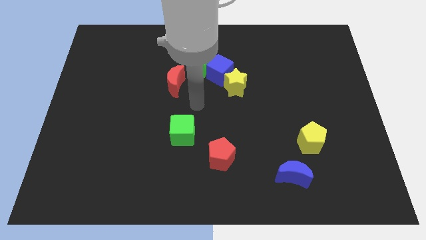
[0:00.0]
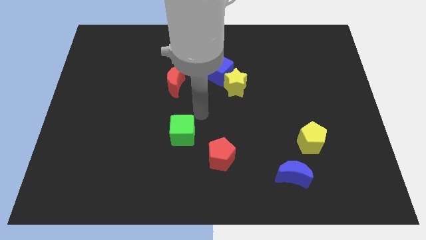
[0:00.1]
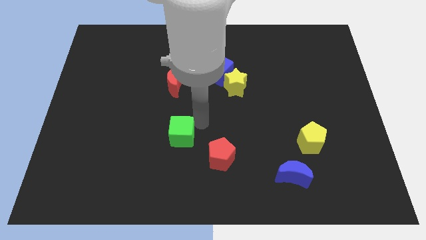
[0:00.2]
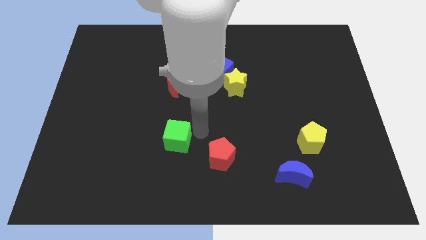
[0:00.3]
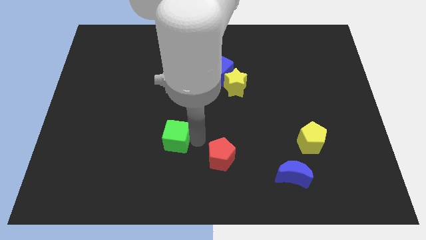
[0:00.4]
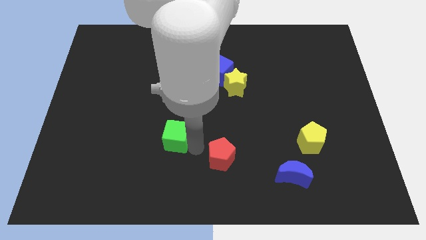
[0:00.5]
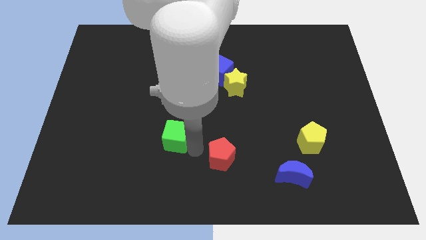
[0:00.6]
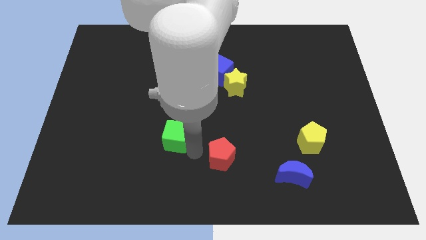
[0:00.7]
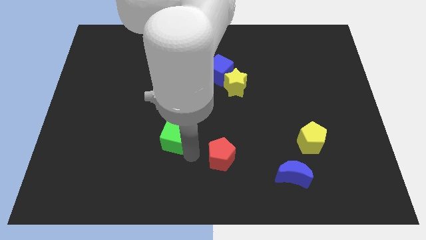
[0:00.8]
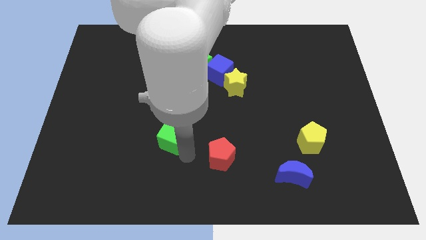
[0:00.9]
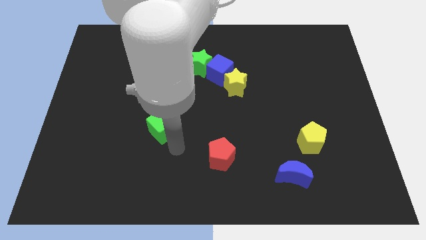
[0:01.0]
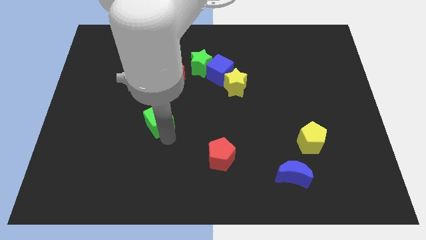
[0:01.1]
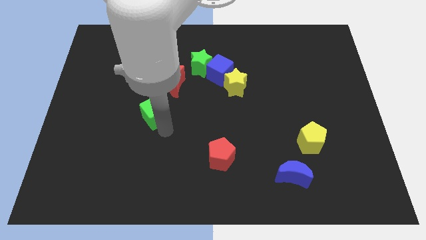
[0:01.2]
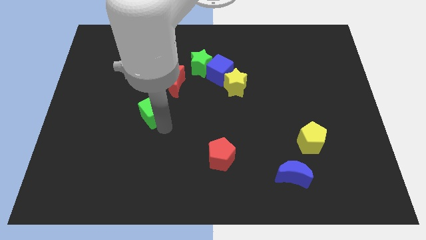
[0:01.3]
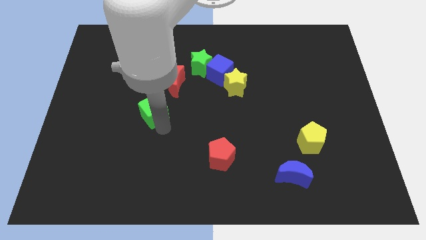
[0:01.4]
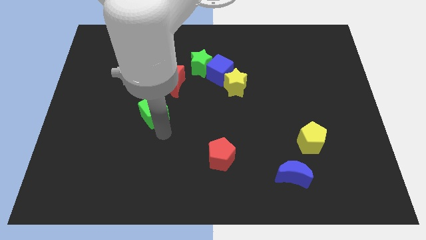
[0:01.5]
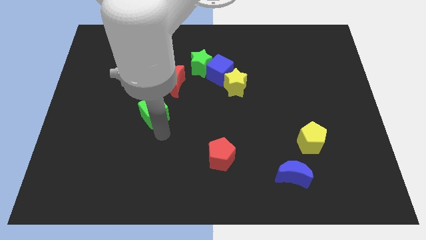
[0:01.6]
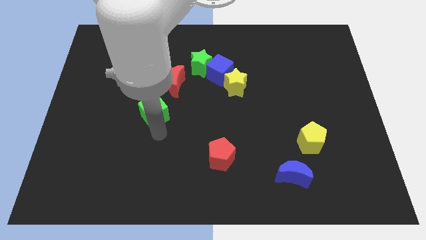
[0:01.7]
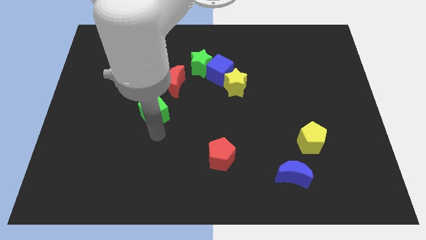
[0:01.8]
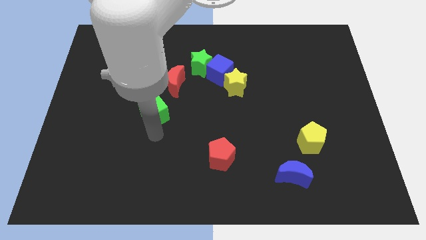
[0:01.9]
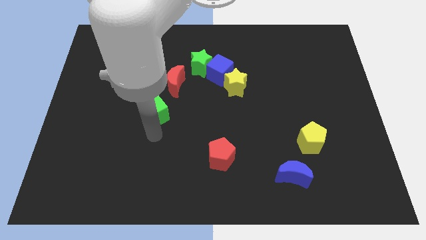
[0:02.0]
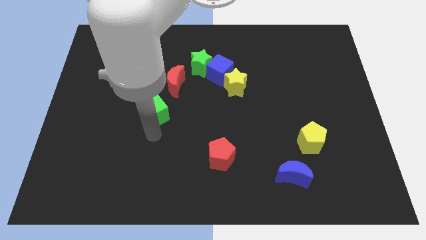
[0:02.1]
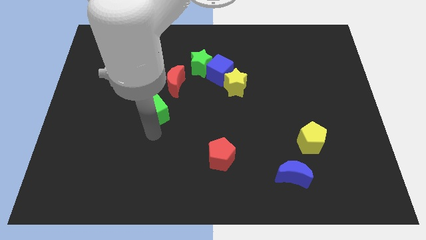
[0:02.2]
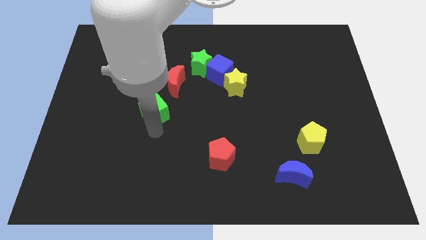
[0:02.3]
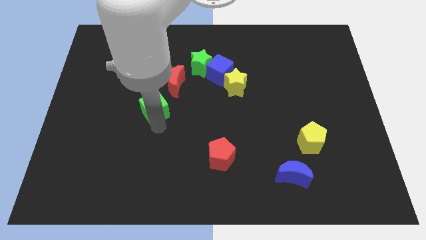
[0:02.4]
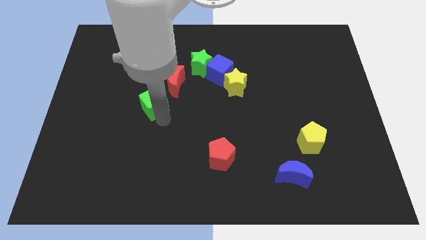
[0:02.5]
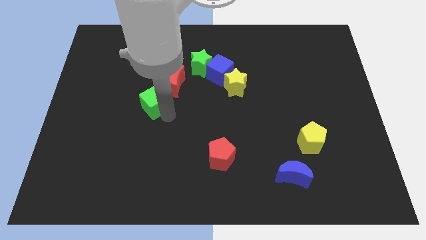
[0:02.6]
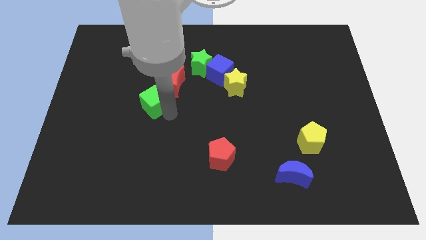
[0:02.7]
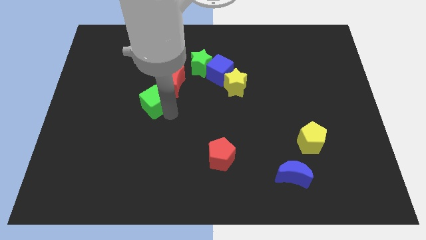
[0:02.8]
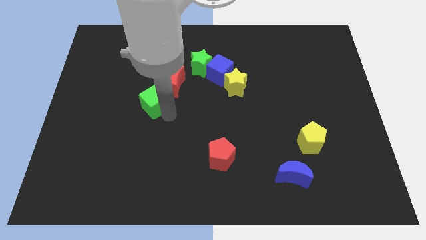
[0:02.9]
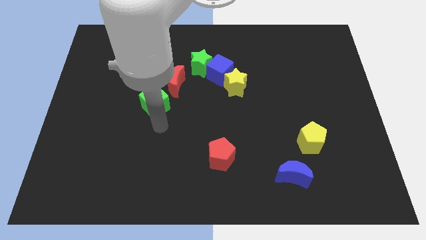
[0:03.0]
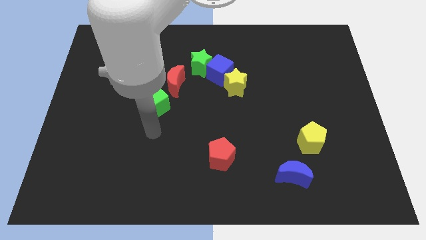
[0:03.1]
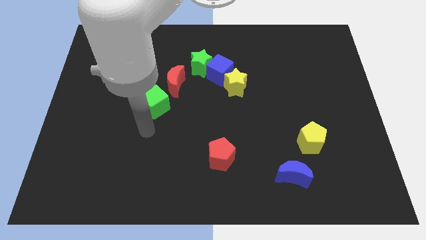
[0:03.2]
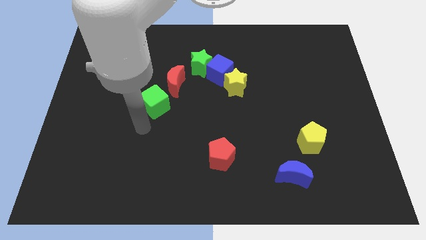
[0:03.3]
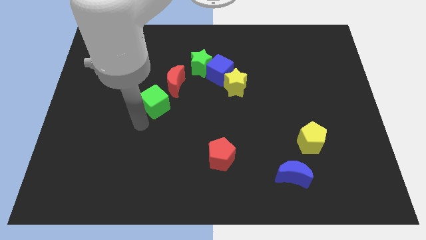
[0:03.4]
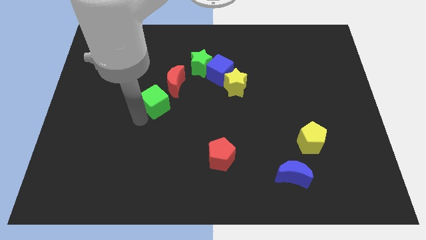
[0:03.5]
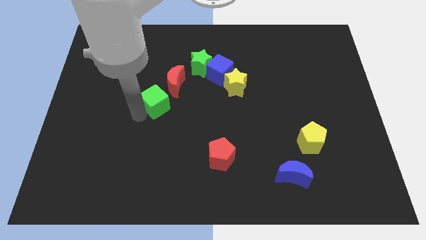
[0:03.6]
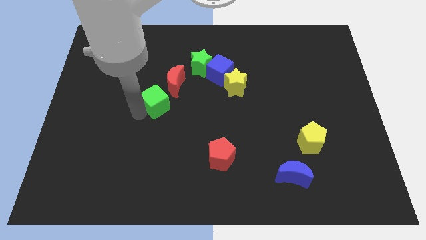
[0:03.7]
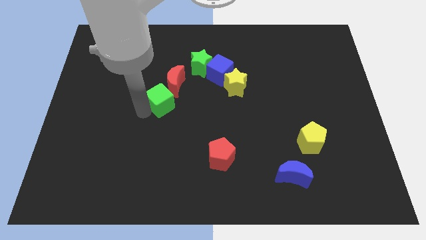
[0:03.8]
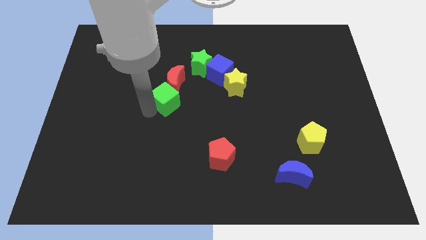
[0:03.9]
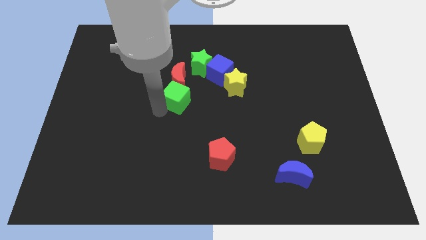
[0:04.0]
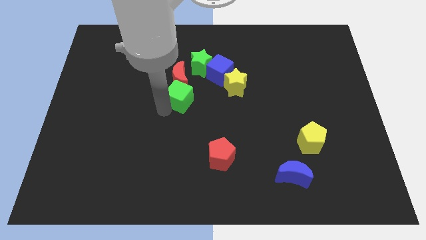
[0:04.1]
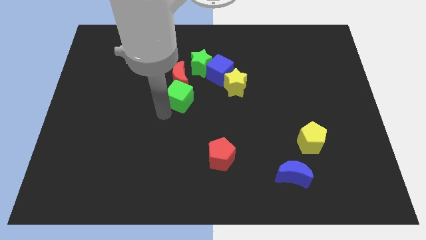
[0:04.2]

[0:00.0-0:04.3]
move the green cube to the bottom of the red crescent

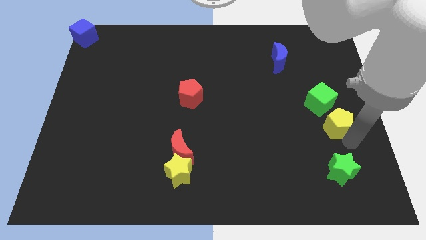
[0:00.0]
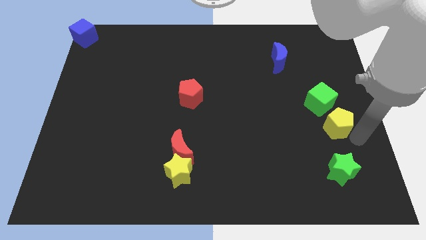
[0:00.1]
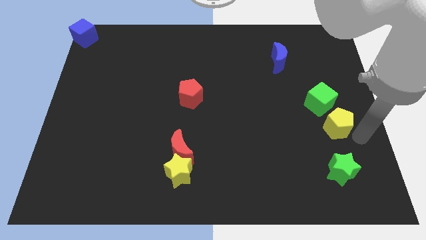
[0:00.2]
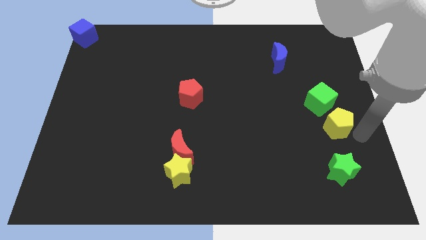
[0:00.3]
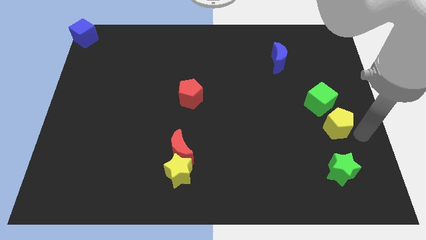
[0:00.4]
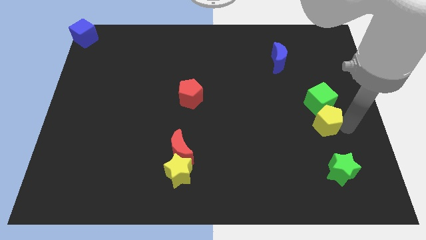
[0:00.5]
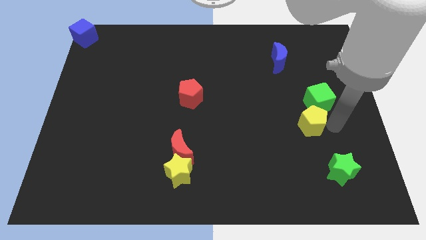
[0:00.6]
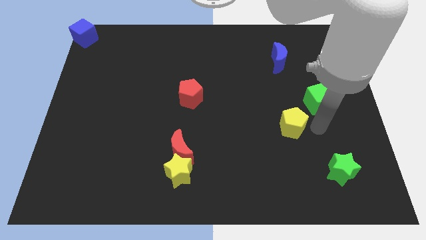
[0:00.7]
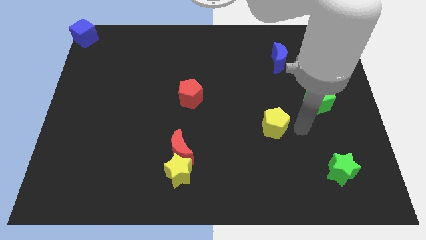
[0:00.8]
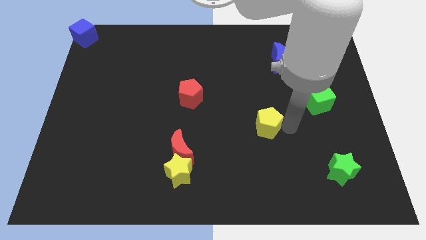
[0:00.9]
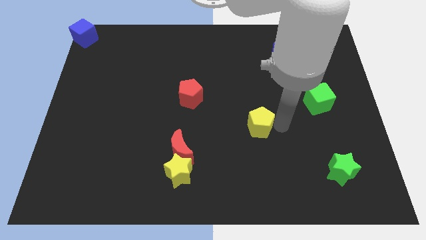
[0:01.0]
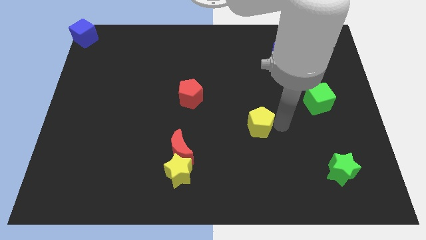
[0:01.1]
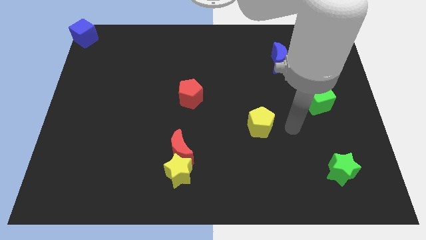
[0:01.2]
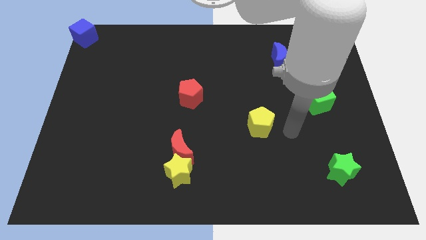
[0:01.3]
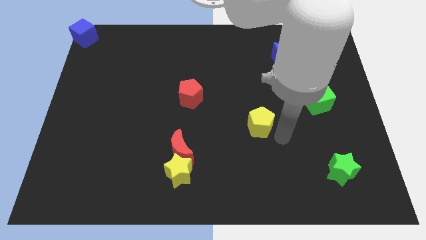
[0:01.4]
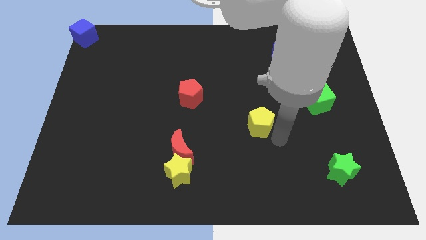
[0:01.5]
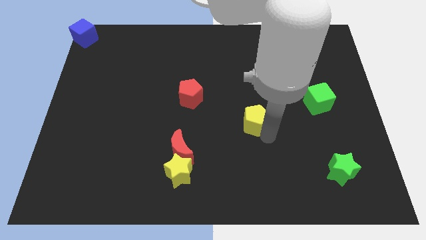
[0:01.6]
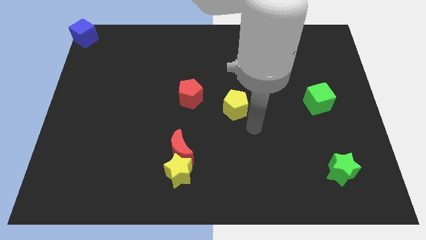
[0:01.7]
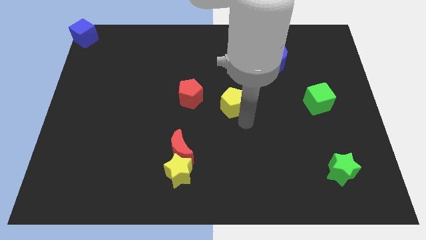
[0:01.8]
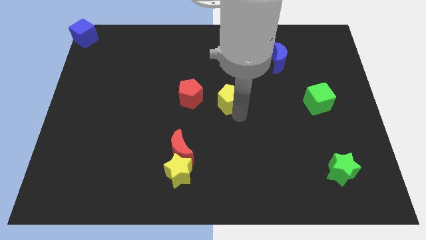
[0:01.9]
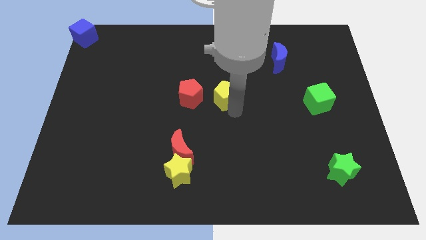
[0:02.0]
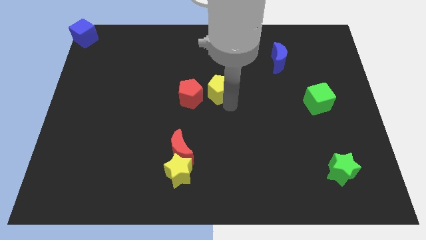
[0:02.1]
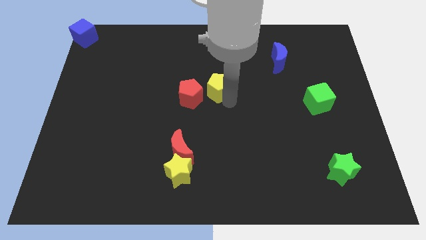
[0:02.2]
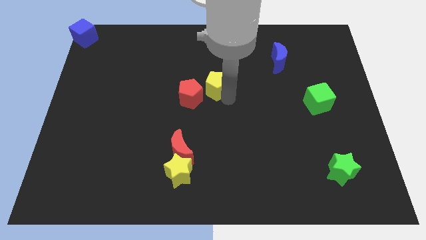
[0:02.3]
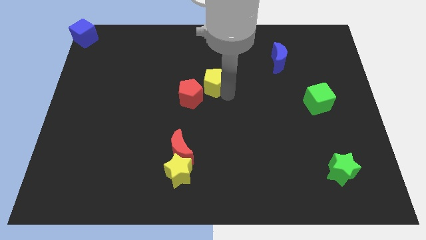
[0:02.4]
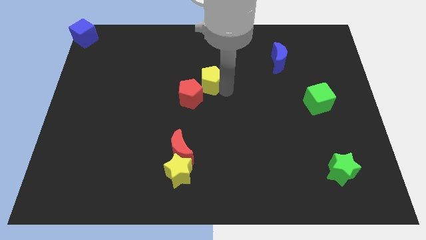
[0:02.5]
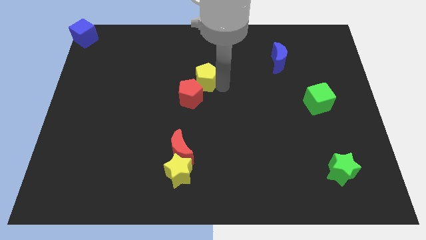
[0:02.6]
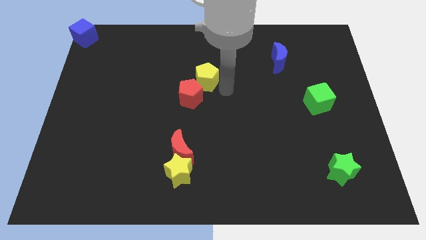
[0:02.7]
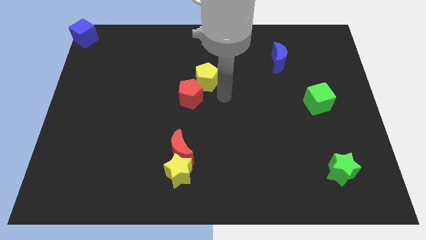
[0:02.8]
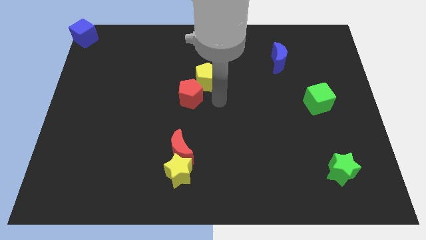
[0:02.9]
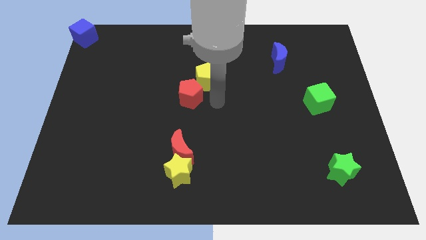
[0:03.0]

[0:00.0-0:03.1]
separate yellow pentagon from green cube

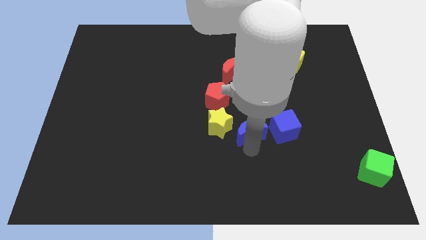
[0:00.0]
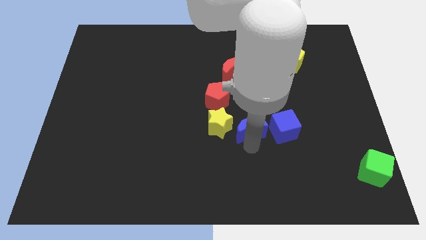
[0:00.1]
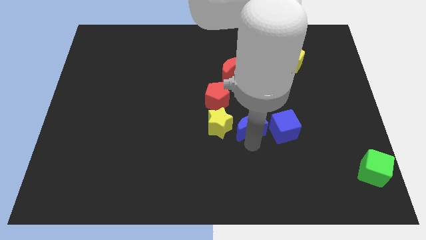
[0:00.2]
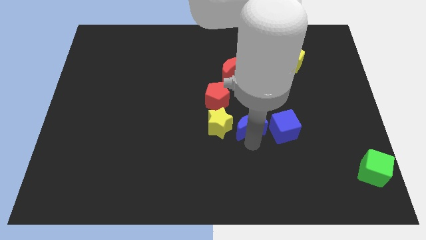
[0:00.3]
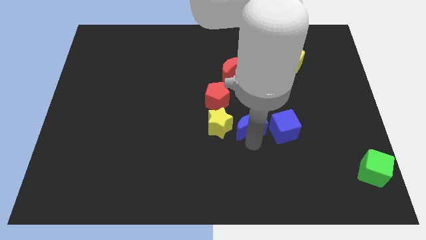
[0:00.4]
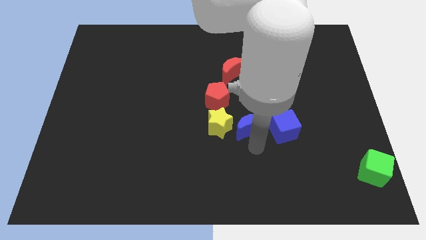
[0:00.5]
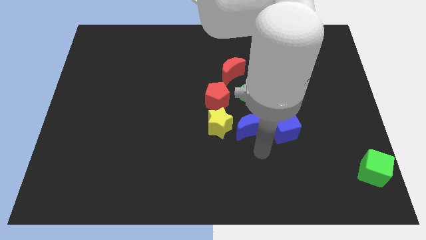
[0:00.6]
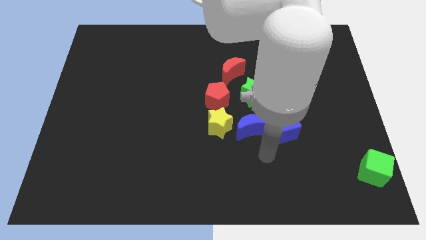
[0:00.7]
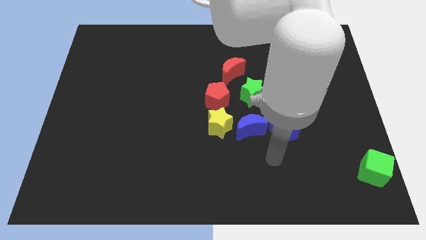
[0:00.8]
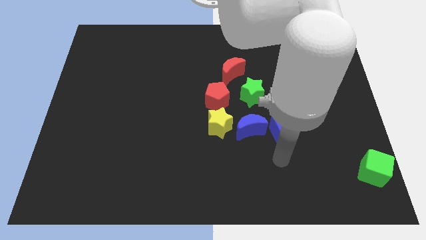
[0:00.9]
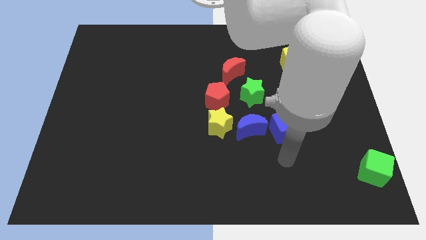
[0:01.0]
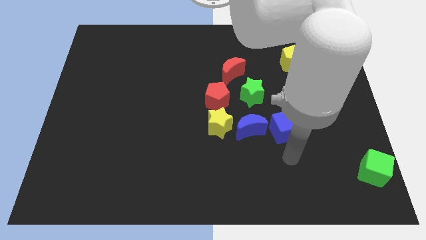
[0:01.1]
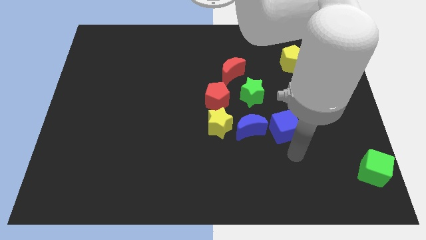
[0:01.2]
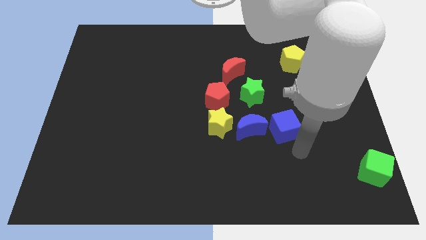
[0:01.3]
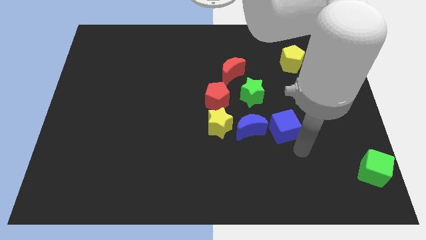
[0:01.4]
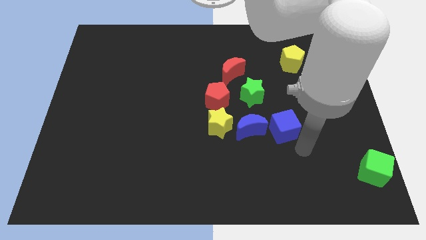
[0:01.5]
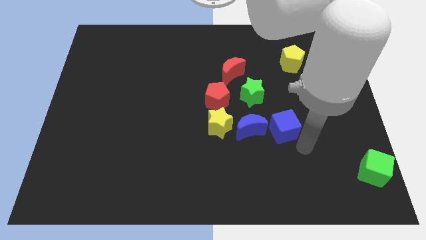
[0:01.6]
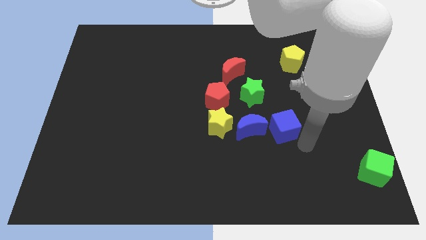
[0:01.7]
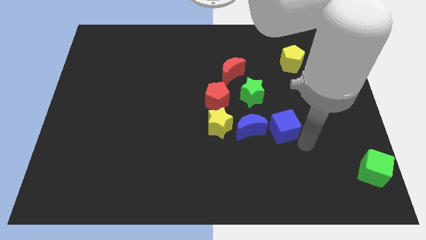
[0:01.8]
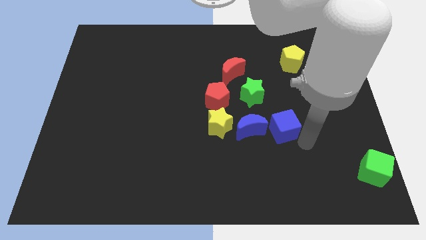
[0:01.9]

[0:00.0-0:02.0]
drag the blue crescent slightly to the top side of the board
